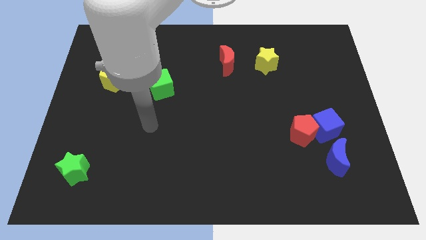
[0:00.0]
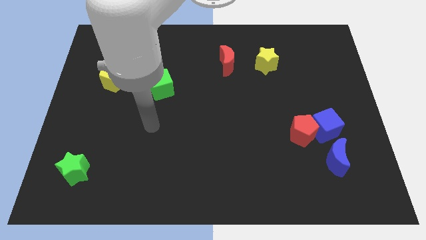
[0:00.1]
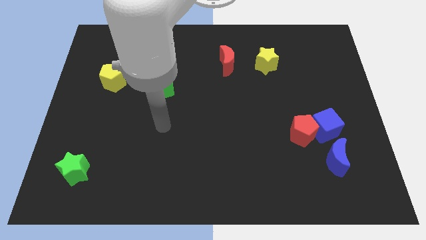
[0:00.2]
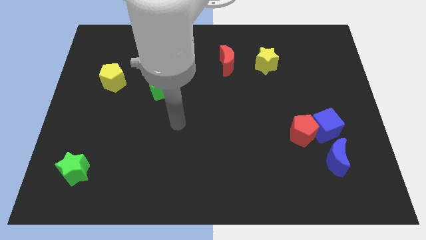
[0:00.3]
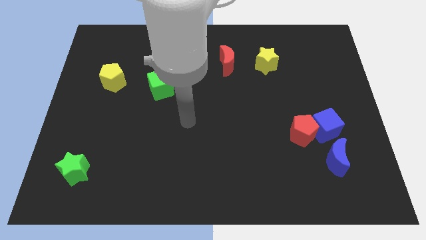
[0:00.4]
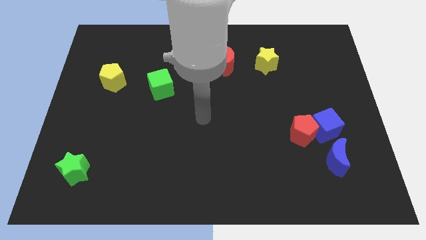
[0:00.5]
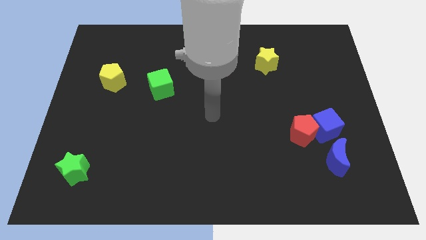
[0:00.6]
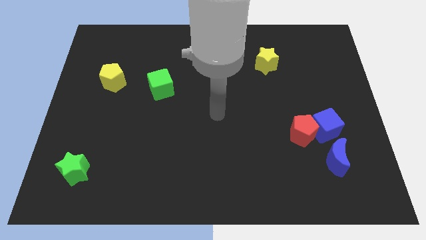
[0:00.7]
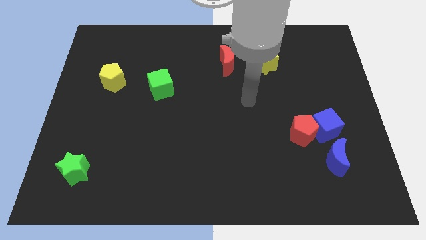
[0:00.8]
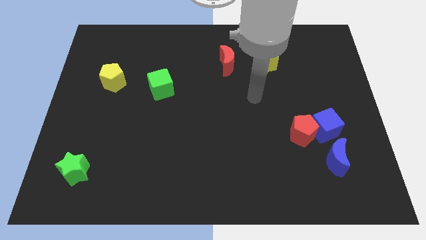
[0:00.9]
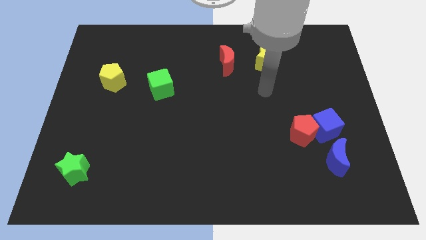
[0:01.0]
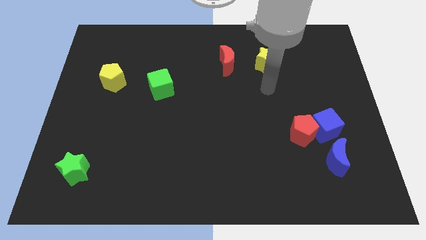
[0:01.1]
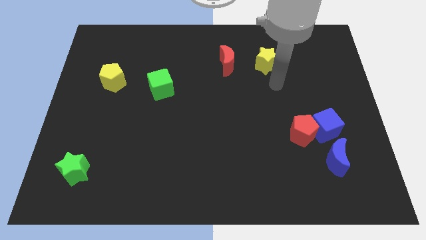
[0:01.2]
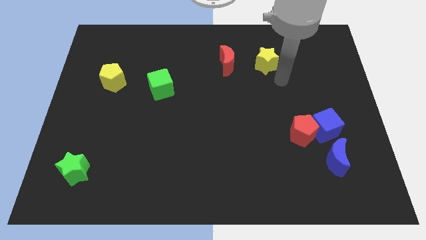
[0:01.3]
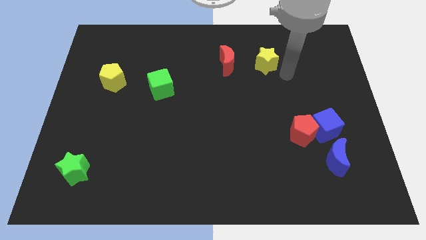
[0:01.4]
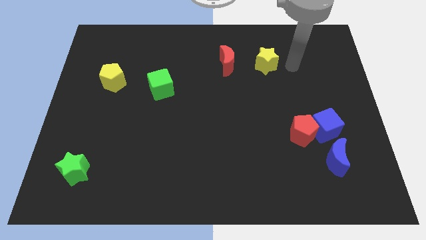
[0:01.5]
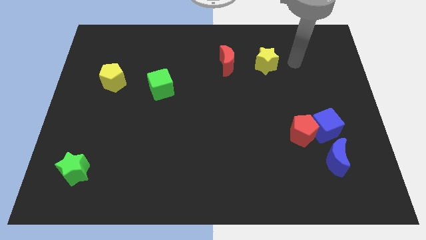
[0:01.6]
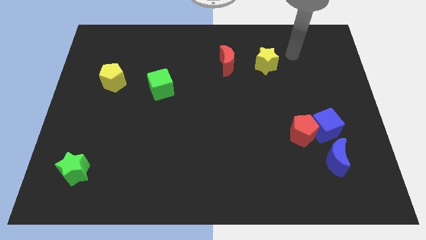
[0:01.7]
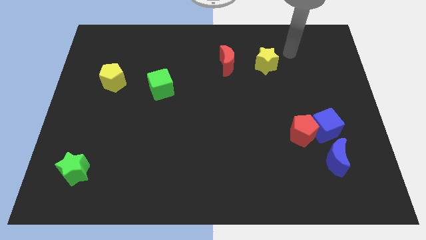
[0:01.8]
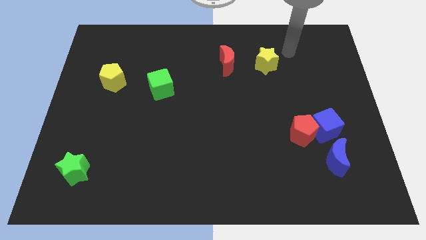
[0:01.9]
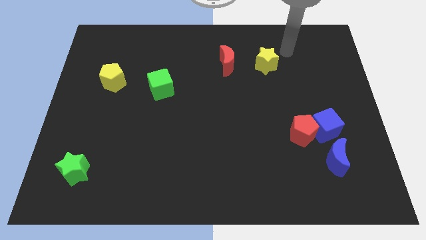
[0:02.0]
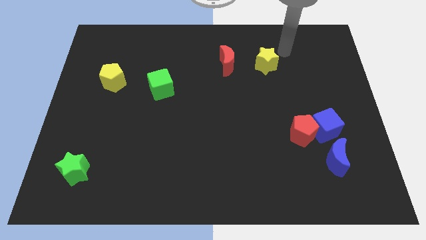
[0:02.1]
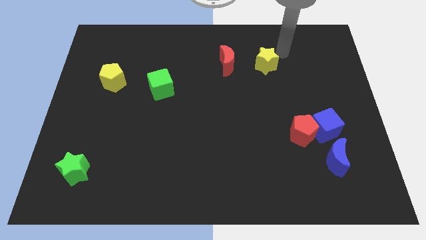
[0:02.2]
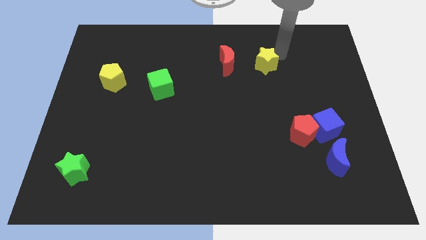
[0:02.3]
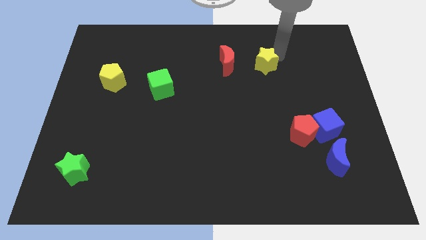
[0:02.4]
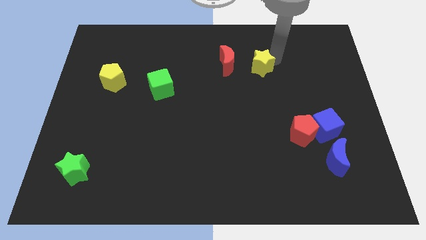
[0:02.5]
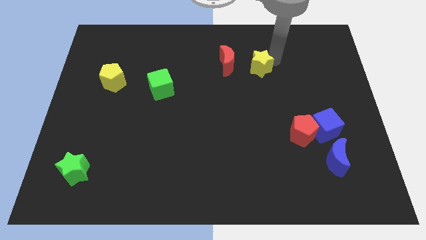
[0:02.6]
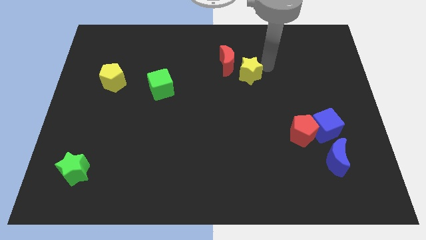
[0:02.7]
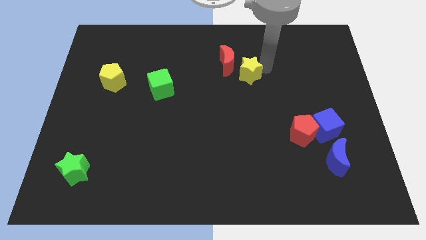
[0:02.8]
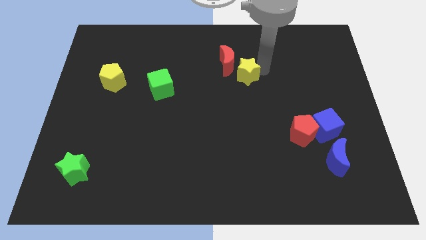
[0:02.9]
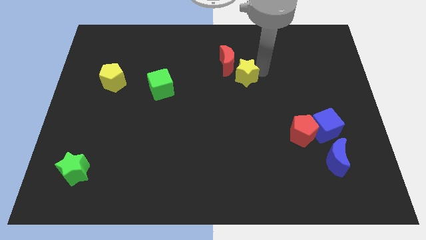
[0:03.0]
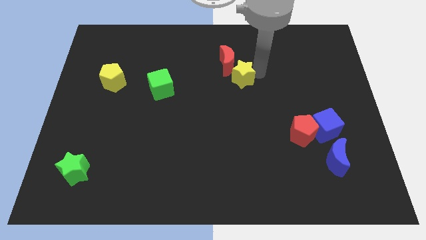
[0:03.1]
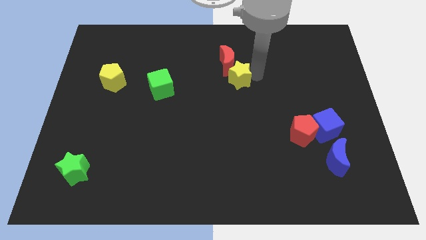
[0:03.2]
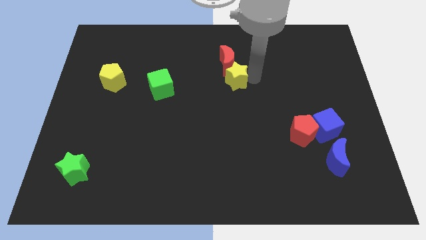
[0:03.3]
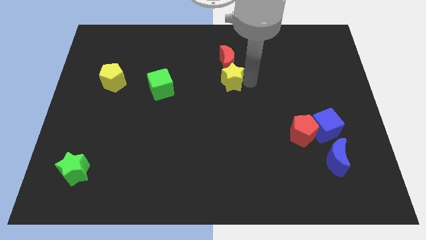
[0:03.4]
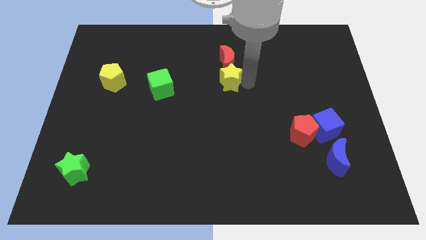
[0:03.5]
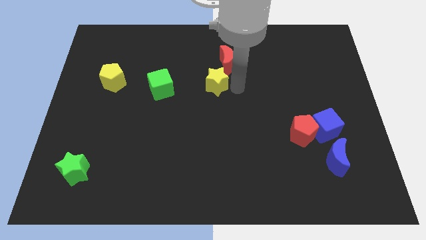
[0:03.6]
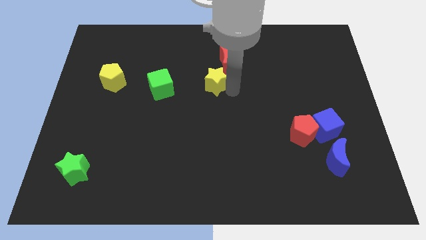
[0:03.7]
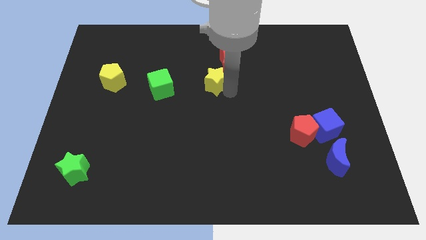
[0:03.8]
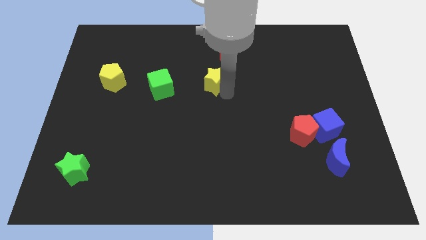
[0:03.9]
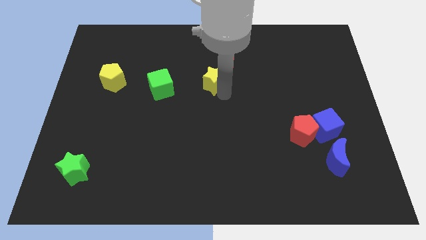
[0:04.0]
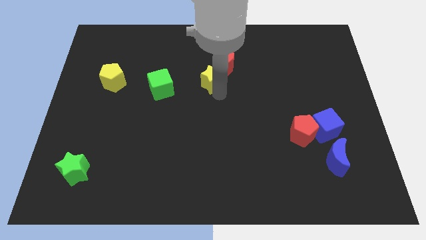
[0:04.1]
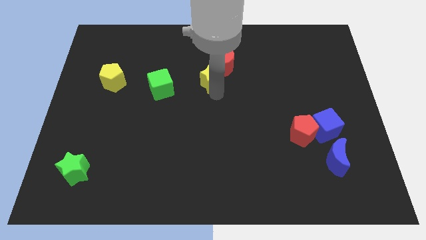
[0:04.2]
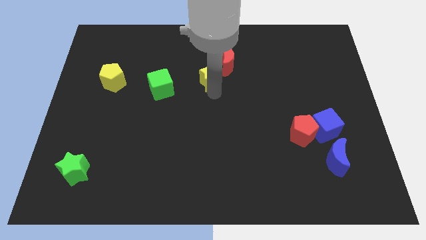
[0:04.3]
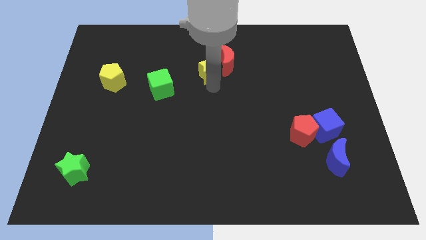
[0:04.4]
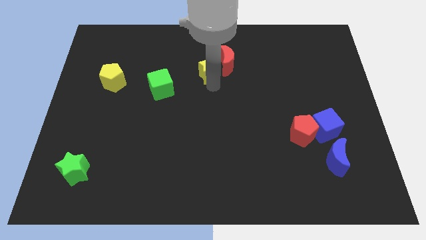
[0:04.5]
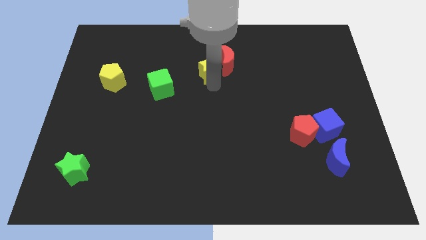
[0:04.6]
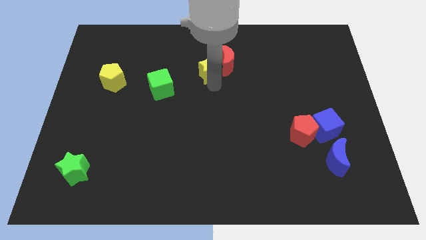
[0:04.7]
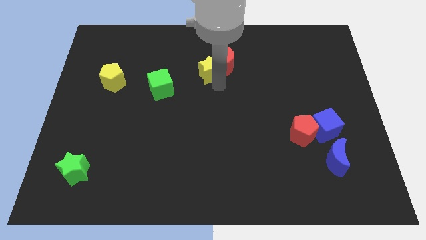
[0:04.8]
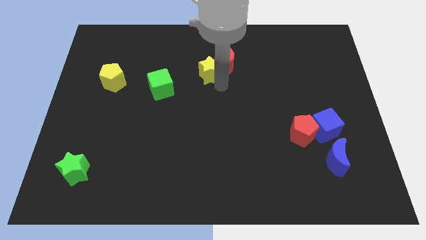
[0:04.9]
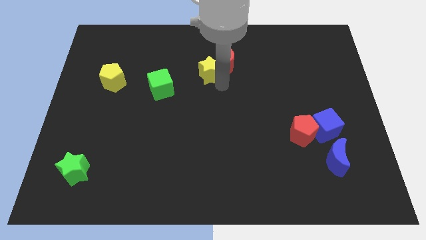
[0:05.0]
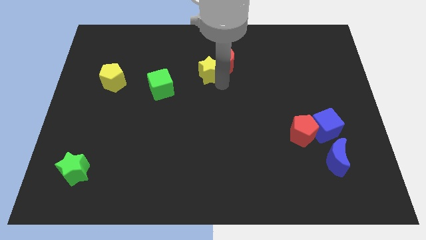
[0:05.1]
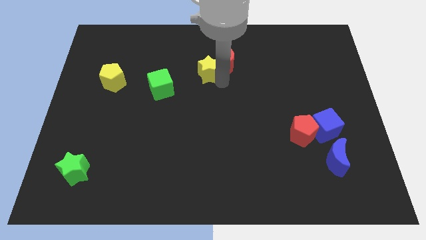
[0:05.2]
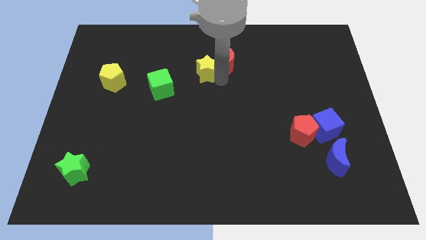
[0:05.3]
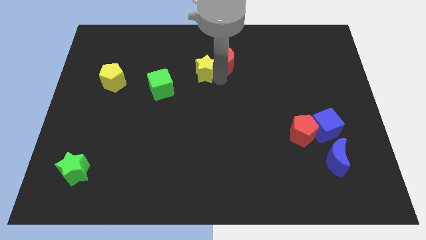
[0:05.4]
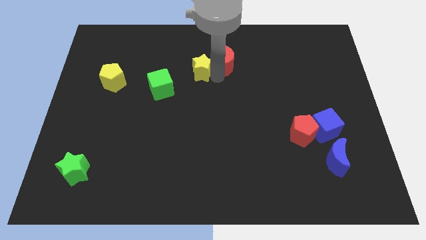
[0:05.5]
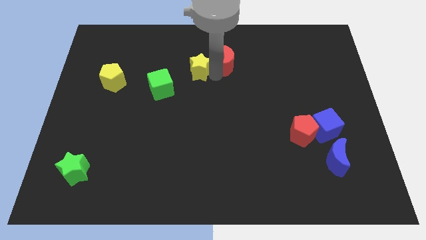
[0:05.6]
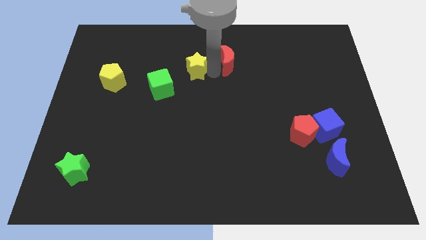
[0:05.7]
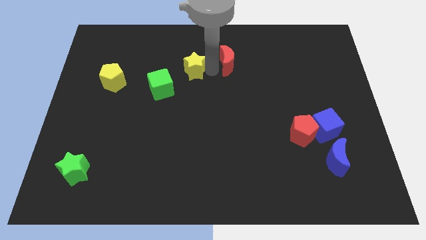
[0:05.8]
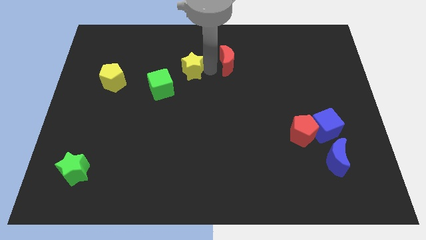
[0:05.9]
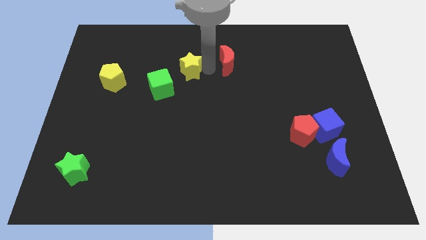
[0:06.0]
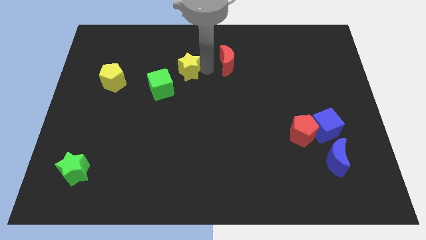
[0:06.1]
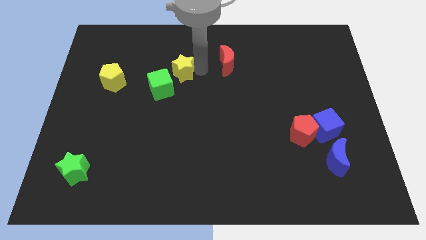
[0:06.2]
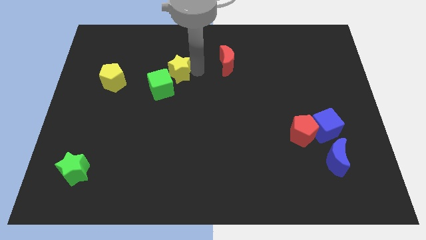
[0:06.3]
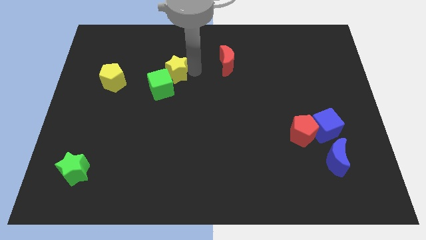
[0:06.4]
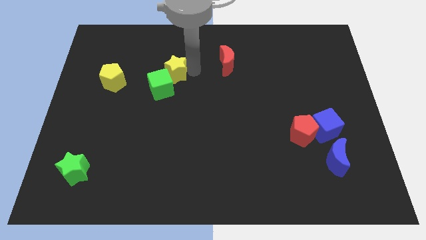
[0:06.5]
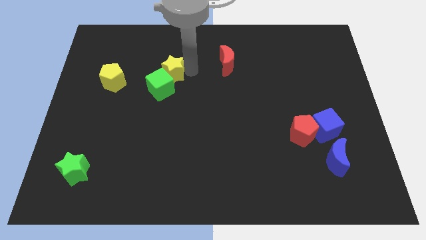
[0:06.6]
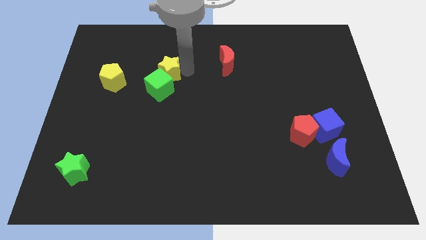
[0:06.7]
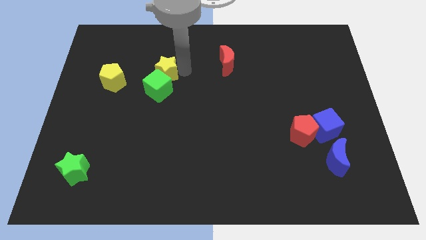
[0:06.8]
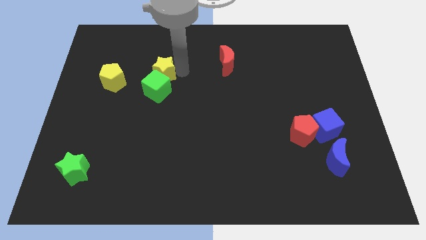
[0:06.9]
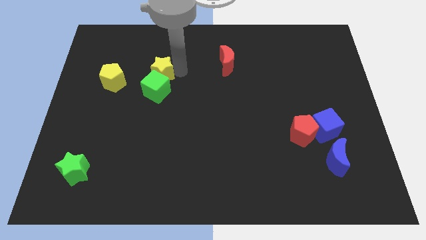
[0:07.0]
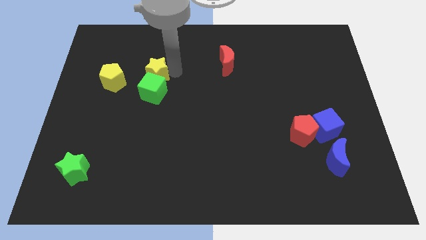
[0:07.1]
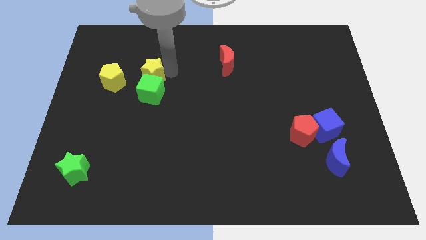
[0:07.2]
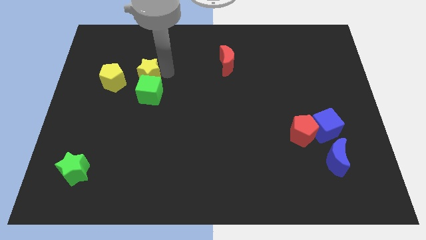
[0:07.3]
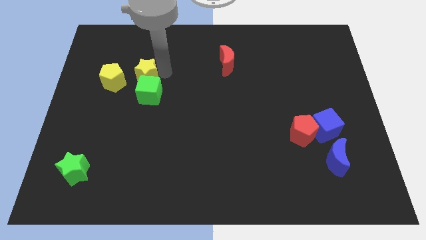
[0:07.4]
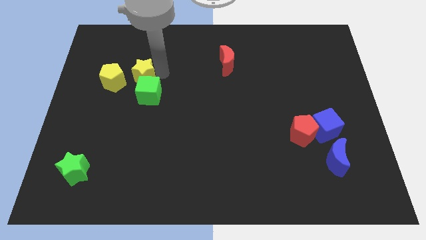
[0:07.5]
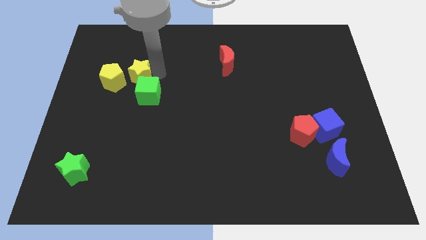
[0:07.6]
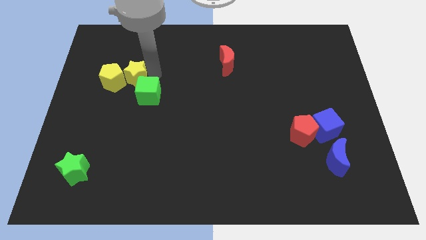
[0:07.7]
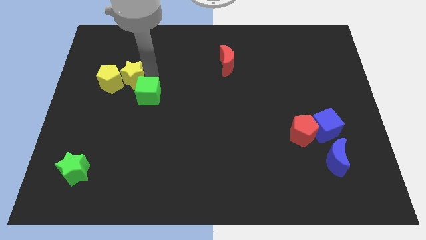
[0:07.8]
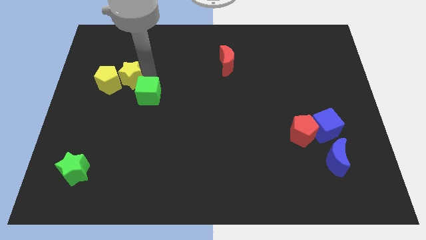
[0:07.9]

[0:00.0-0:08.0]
move the yellow star to the yellow pentagon

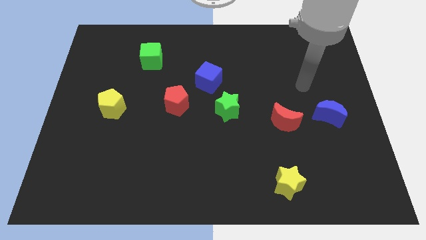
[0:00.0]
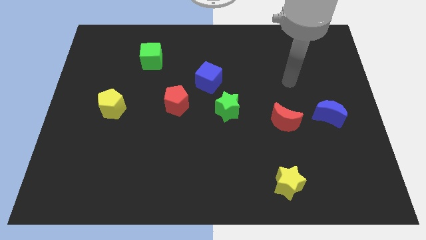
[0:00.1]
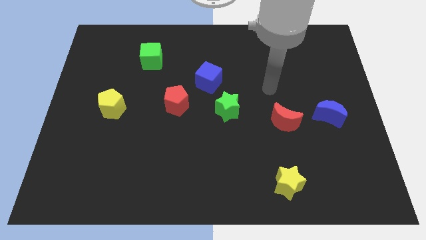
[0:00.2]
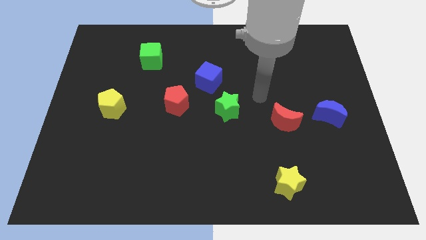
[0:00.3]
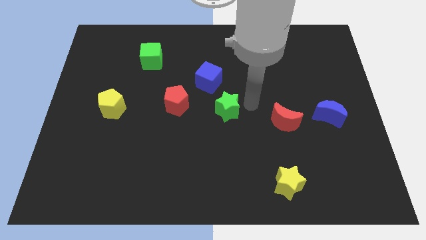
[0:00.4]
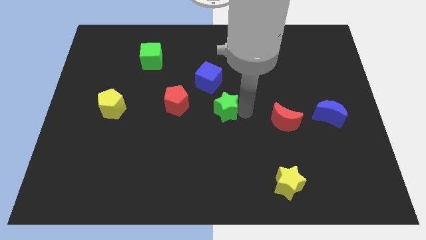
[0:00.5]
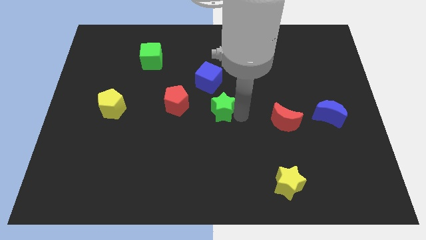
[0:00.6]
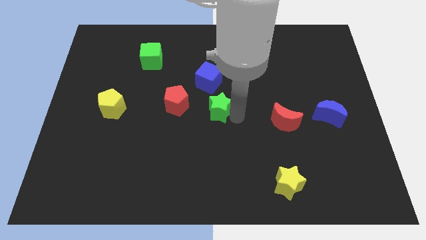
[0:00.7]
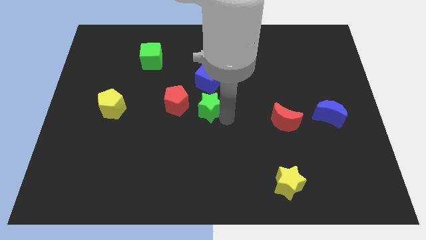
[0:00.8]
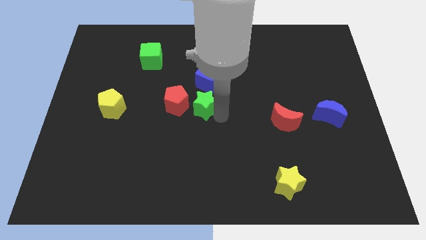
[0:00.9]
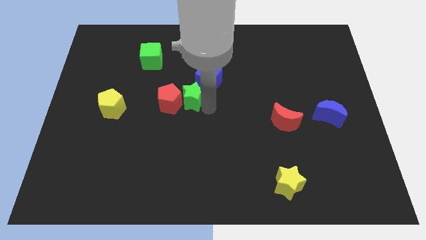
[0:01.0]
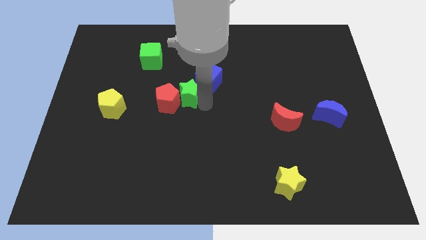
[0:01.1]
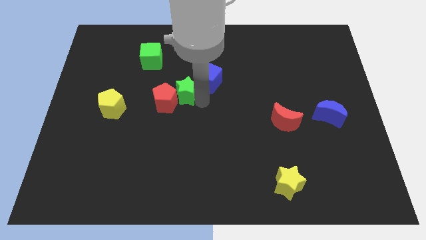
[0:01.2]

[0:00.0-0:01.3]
put the green star to the red pentagon
